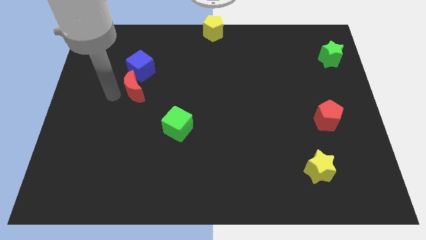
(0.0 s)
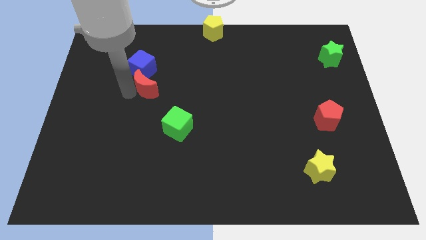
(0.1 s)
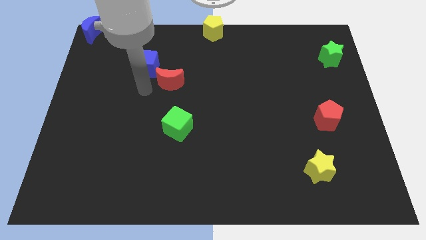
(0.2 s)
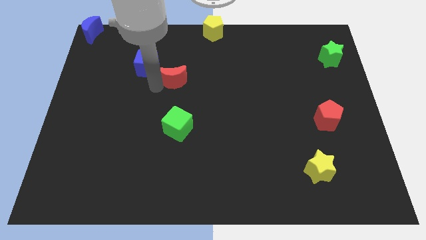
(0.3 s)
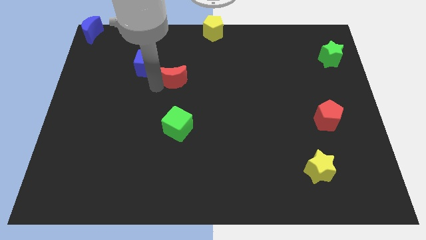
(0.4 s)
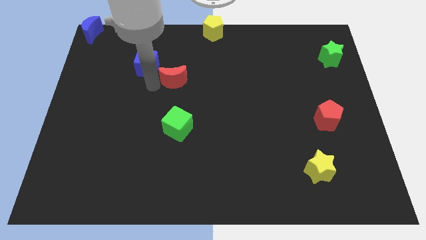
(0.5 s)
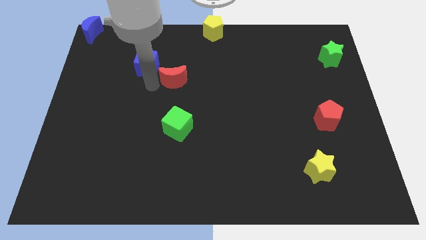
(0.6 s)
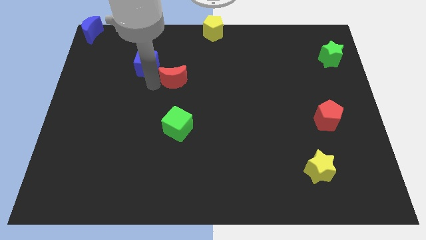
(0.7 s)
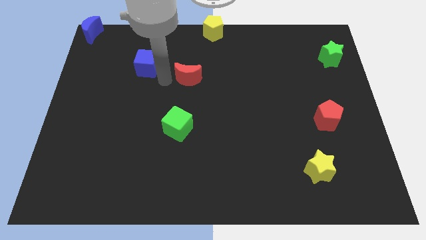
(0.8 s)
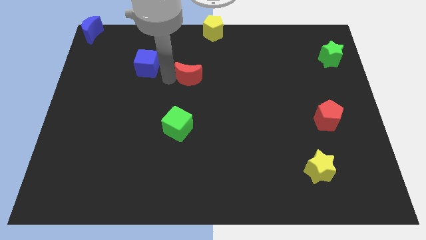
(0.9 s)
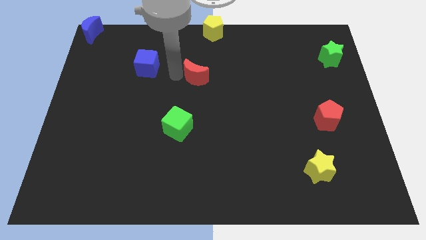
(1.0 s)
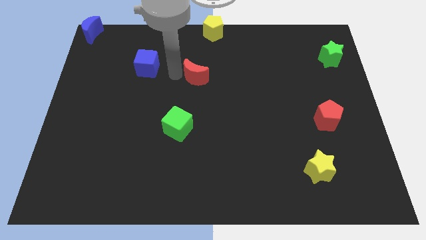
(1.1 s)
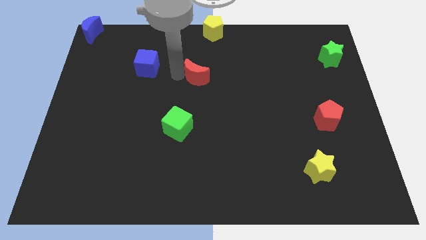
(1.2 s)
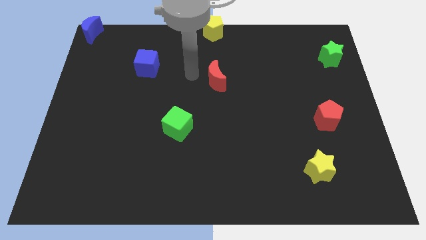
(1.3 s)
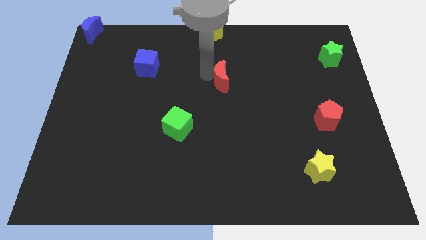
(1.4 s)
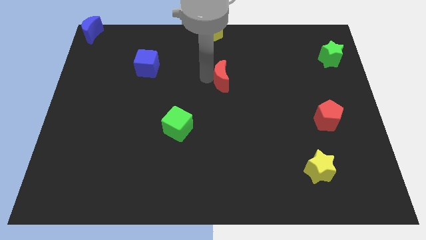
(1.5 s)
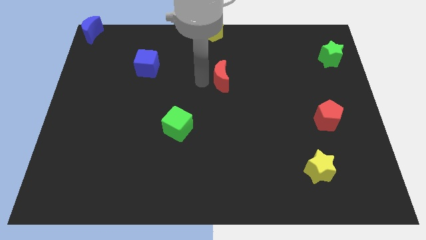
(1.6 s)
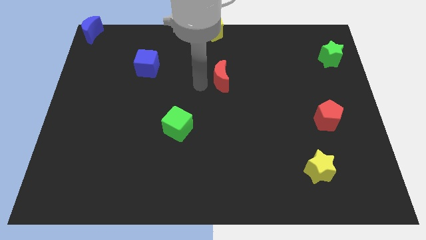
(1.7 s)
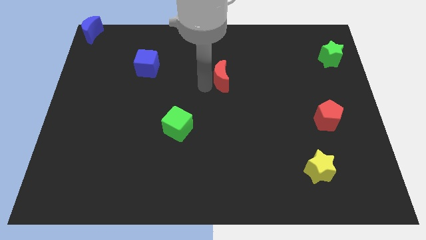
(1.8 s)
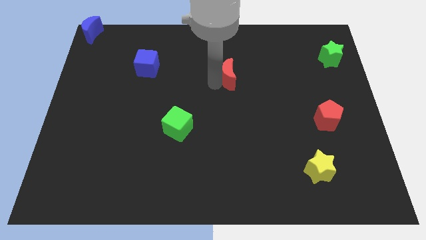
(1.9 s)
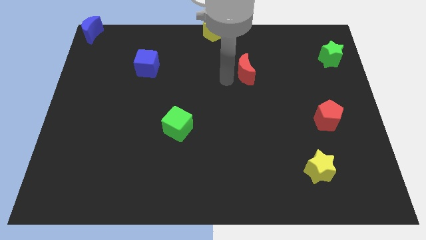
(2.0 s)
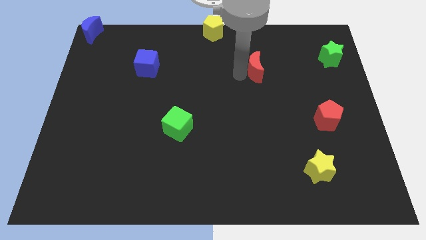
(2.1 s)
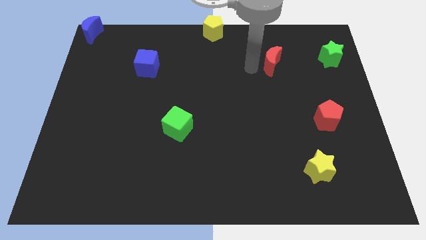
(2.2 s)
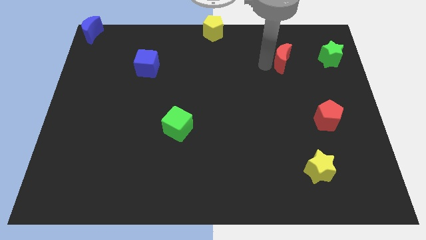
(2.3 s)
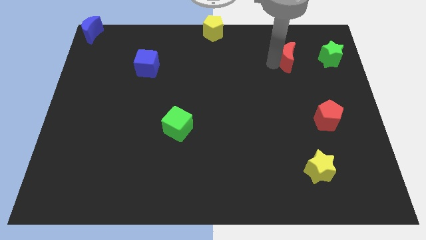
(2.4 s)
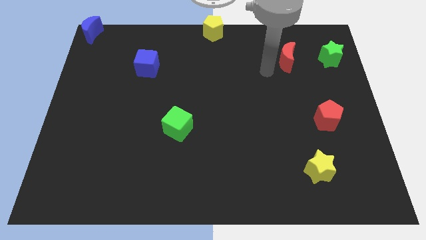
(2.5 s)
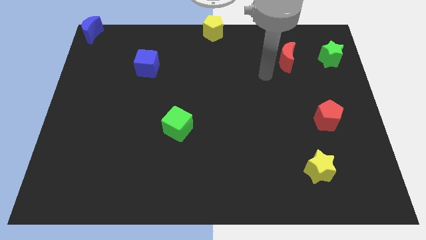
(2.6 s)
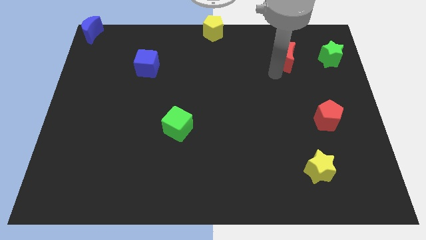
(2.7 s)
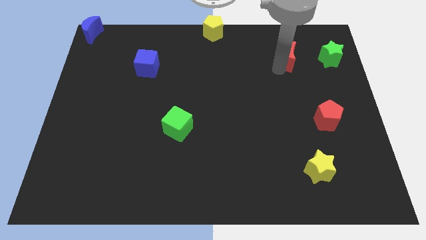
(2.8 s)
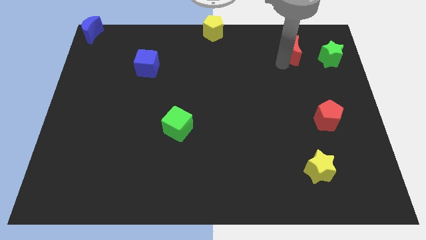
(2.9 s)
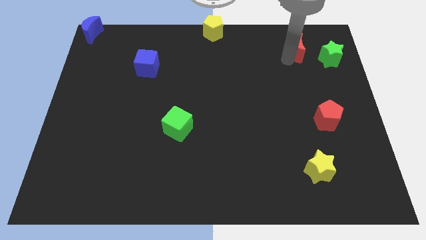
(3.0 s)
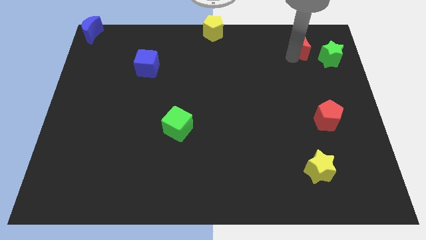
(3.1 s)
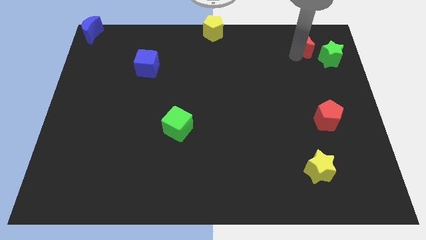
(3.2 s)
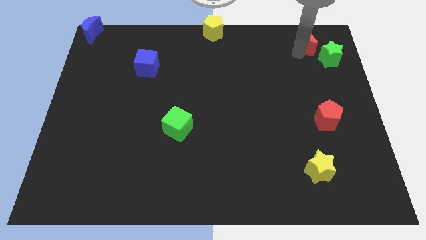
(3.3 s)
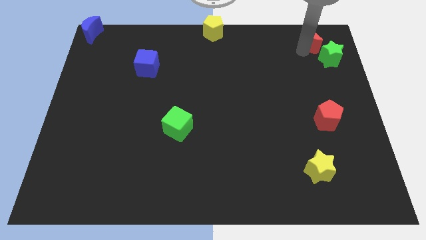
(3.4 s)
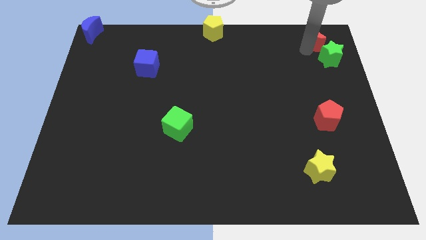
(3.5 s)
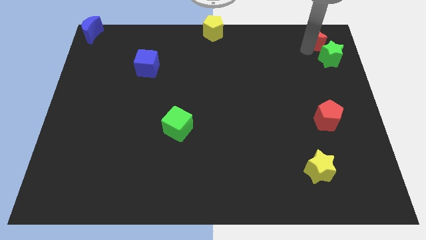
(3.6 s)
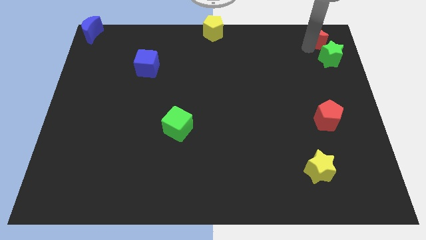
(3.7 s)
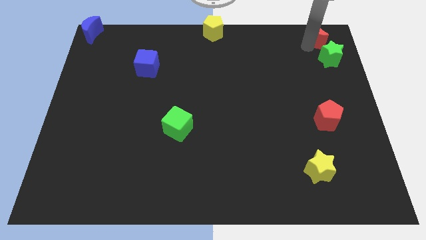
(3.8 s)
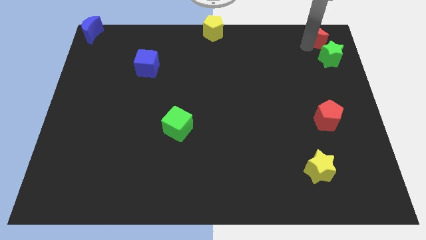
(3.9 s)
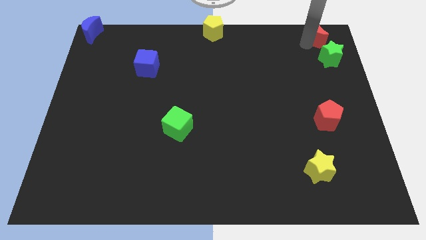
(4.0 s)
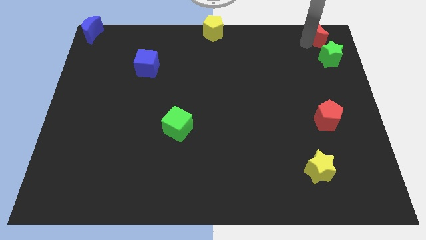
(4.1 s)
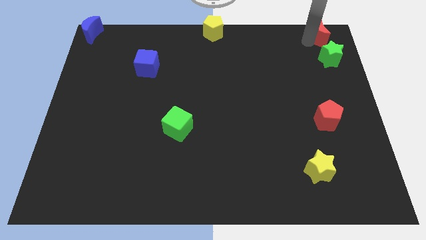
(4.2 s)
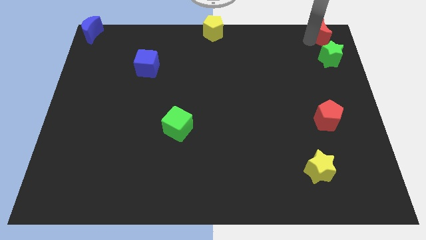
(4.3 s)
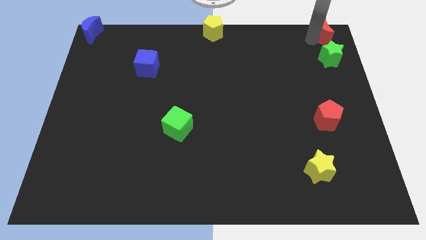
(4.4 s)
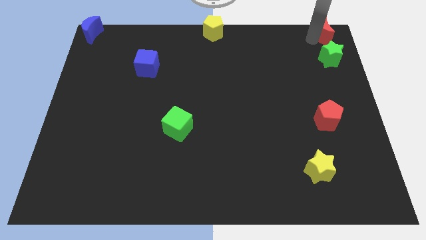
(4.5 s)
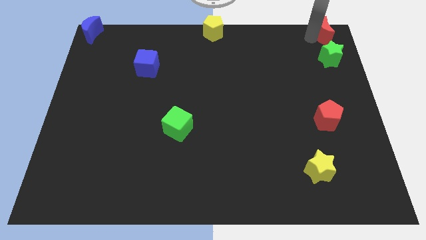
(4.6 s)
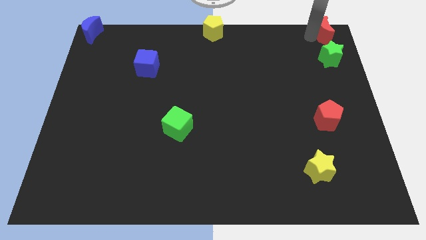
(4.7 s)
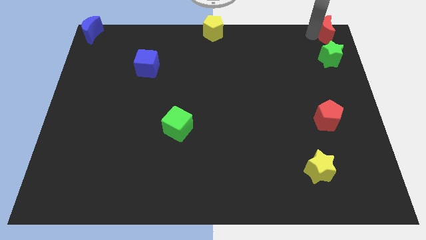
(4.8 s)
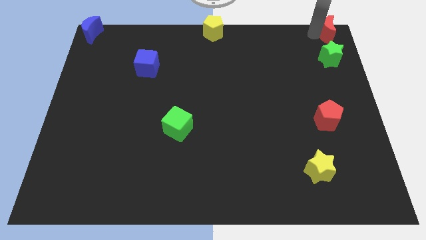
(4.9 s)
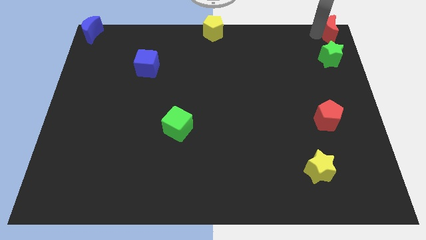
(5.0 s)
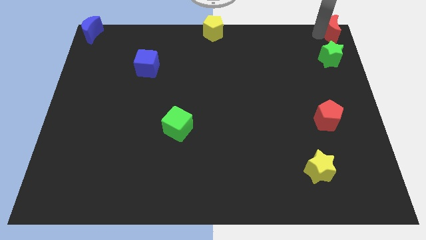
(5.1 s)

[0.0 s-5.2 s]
place the red crescent above the green star

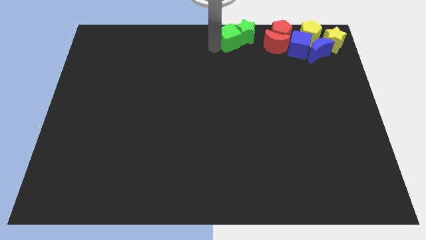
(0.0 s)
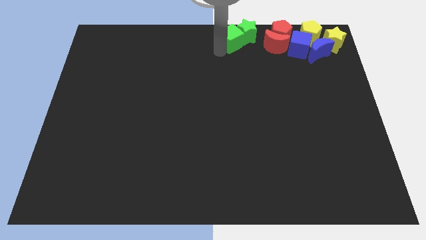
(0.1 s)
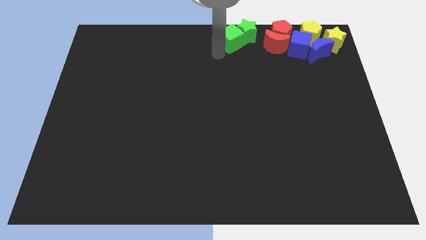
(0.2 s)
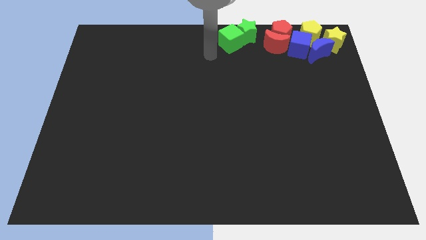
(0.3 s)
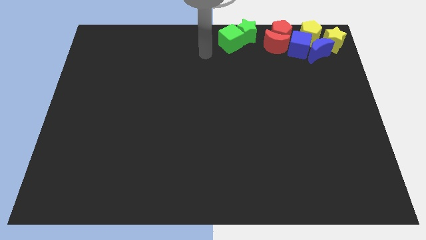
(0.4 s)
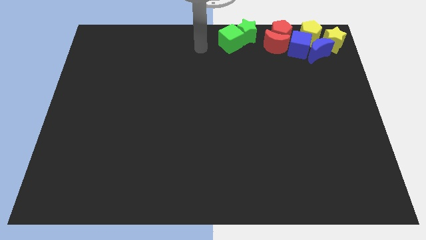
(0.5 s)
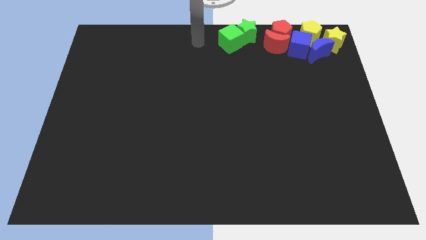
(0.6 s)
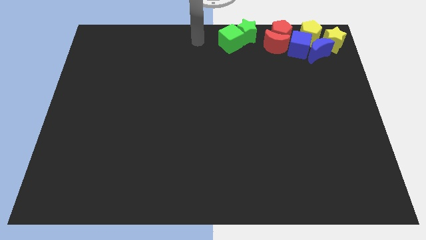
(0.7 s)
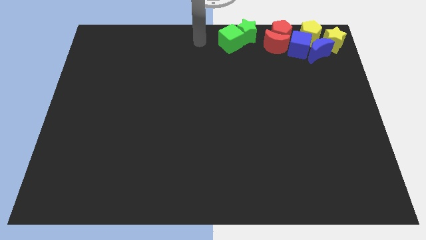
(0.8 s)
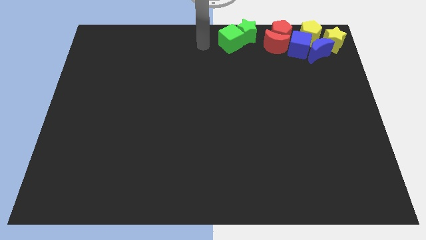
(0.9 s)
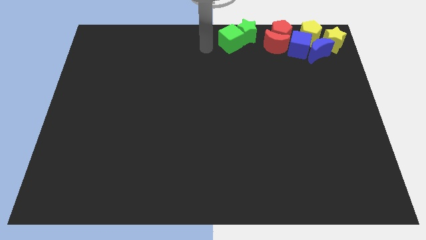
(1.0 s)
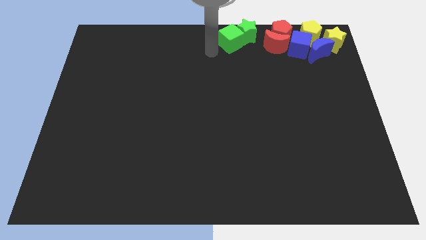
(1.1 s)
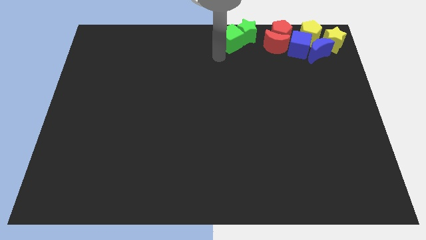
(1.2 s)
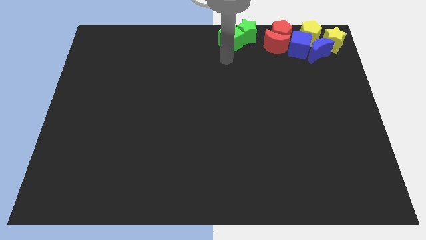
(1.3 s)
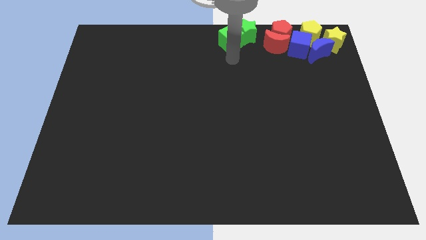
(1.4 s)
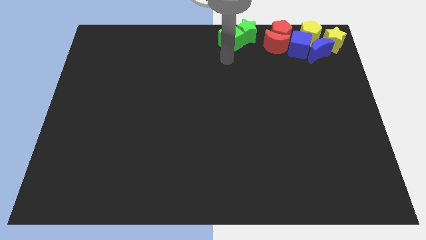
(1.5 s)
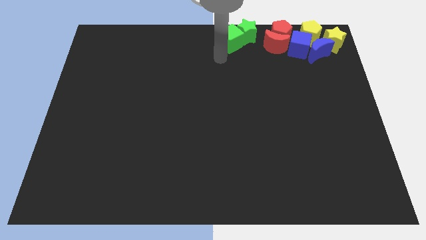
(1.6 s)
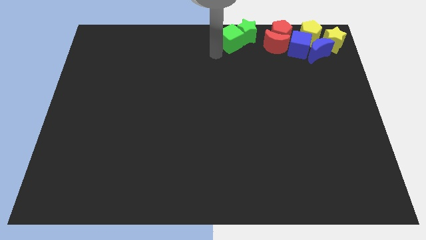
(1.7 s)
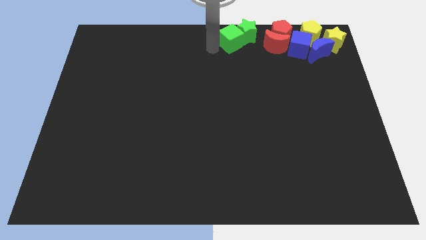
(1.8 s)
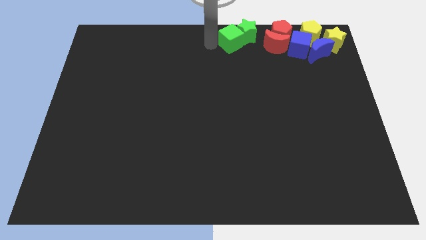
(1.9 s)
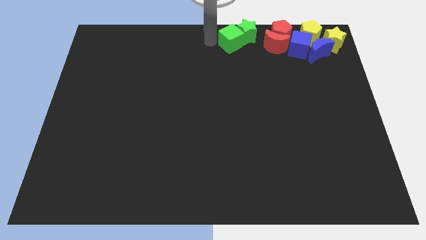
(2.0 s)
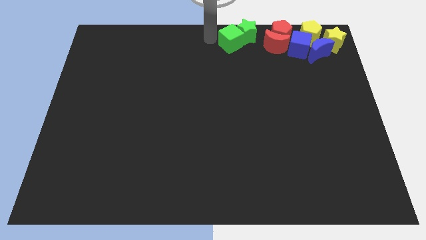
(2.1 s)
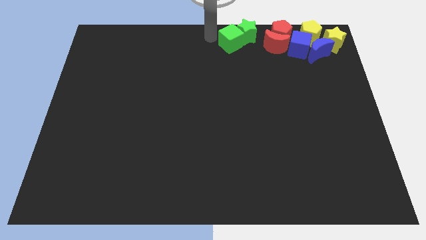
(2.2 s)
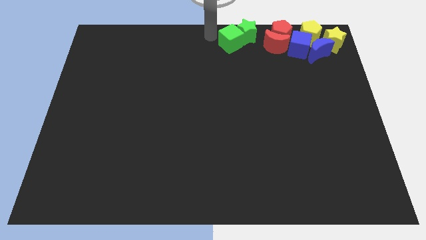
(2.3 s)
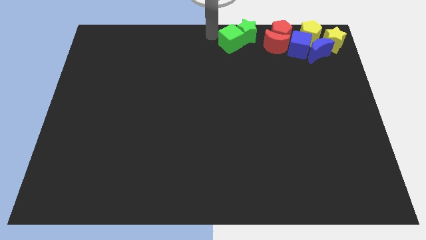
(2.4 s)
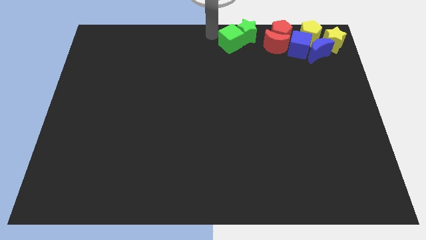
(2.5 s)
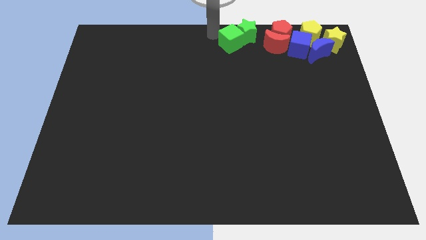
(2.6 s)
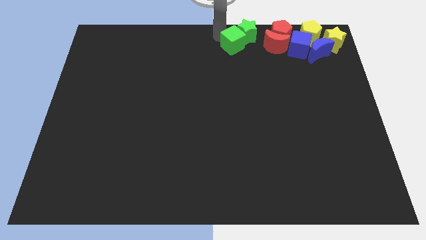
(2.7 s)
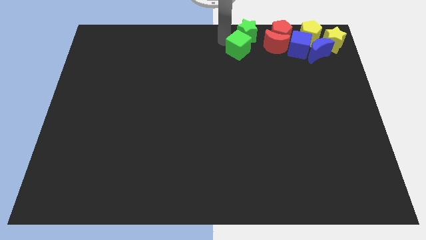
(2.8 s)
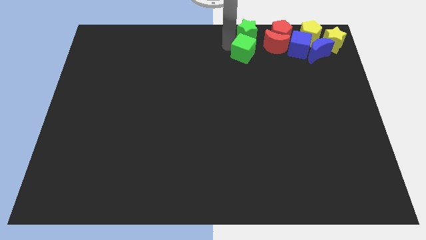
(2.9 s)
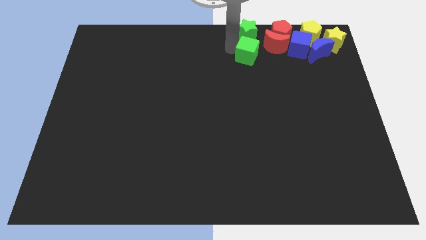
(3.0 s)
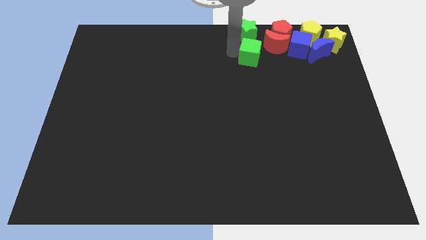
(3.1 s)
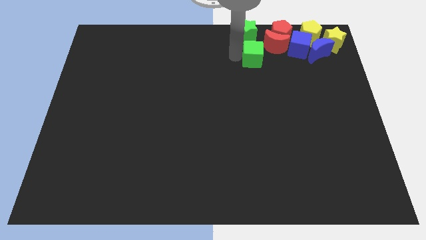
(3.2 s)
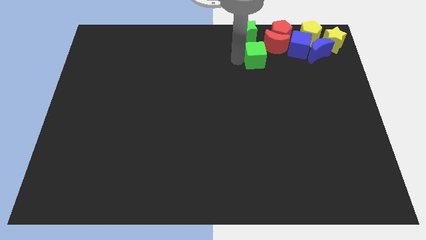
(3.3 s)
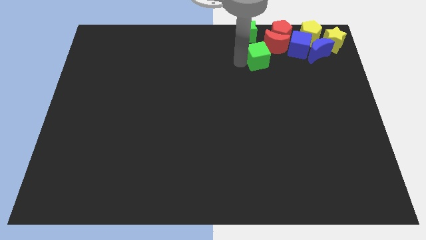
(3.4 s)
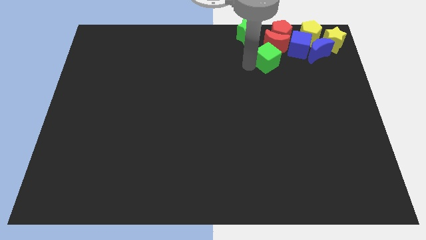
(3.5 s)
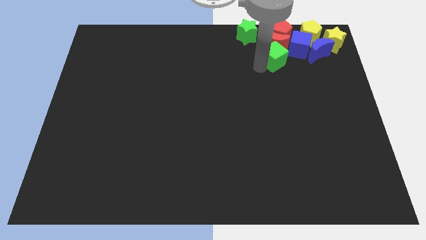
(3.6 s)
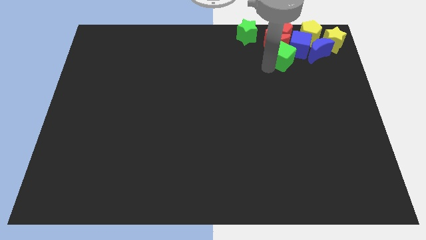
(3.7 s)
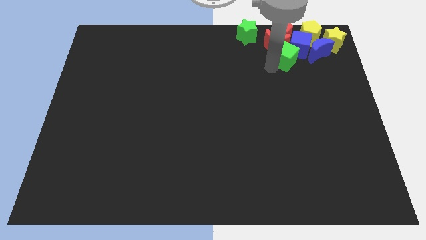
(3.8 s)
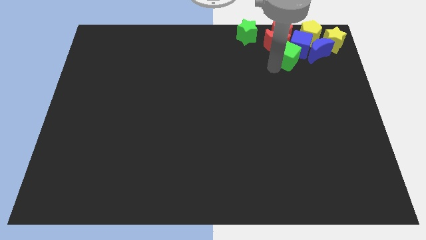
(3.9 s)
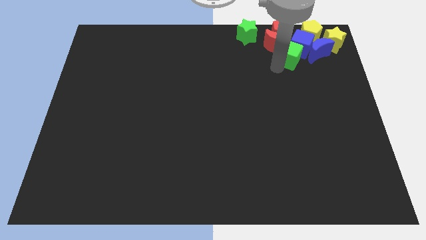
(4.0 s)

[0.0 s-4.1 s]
separate the green cube from the green star
